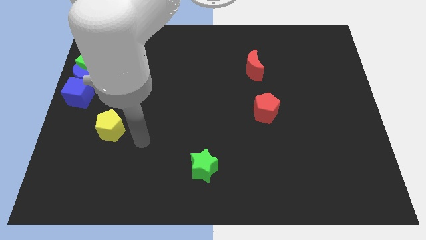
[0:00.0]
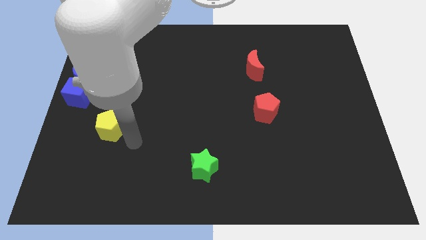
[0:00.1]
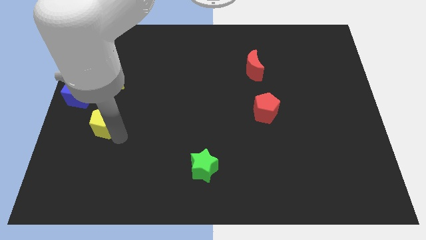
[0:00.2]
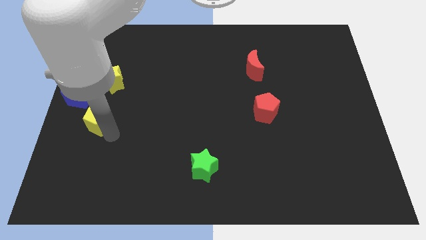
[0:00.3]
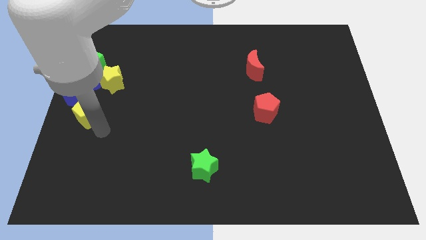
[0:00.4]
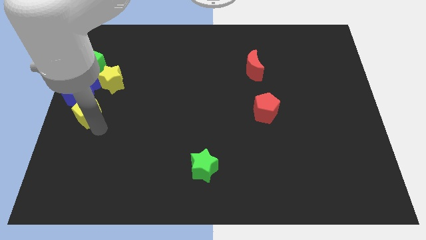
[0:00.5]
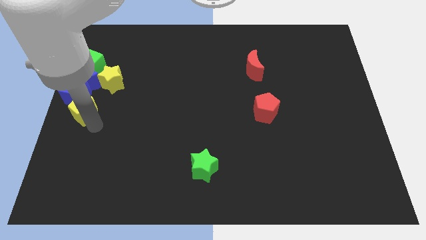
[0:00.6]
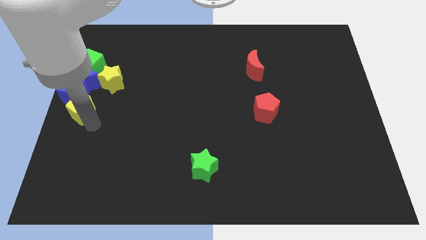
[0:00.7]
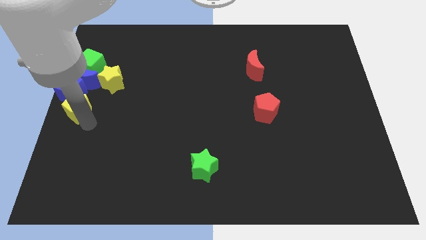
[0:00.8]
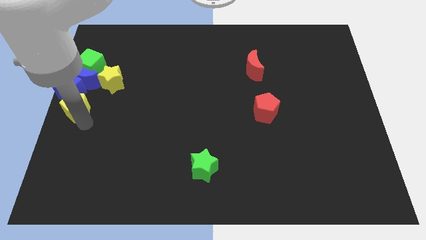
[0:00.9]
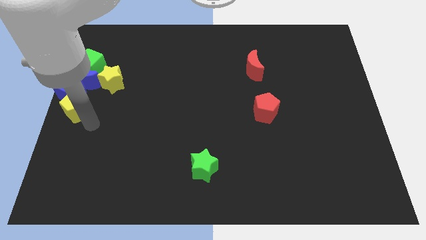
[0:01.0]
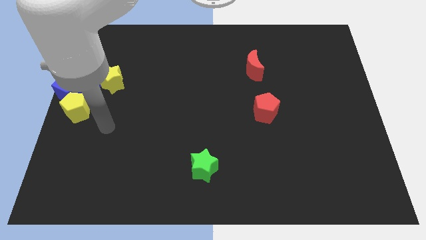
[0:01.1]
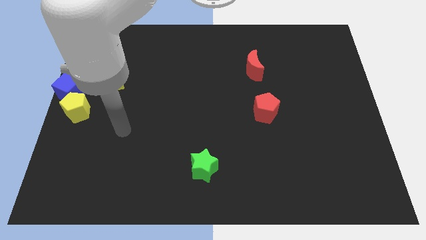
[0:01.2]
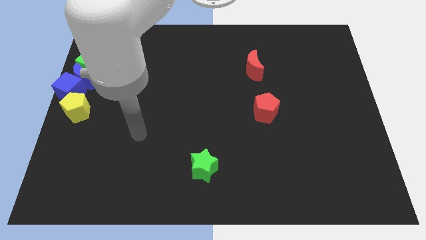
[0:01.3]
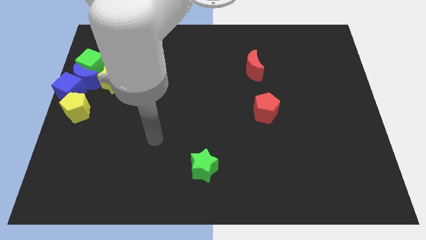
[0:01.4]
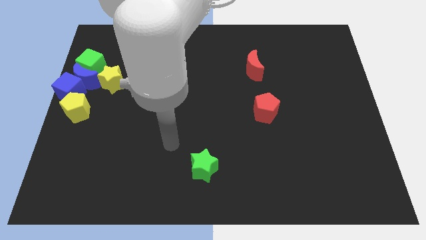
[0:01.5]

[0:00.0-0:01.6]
push the yellow pentagon into the blue cube

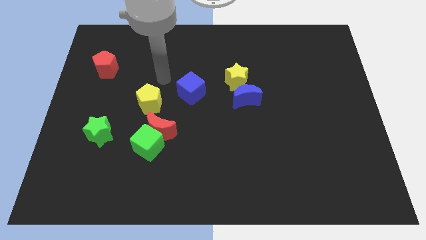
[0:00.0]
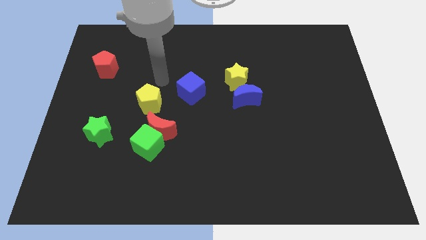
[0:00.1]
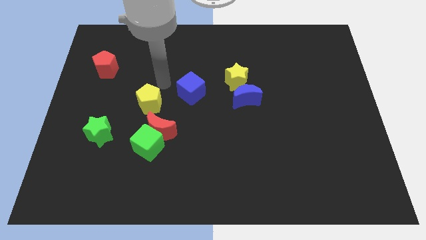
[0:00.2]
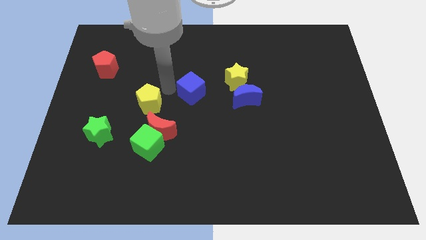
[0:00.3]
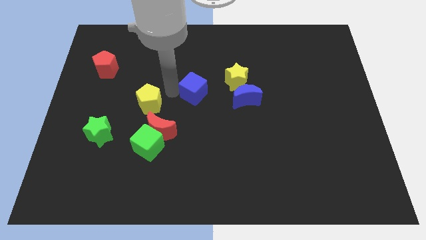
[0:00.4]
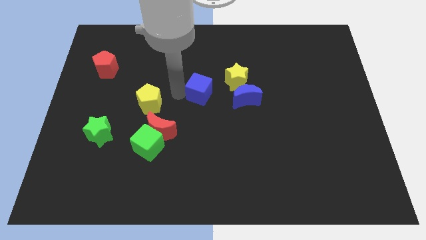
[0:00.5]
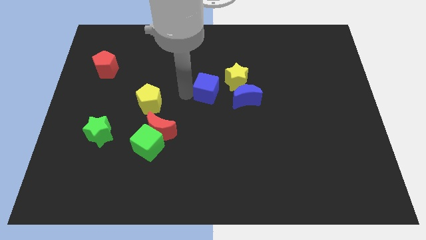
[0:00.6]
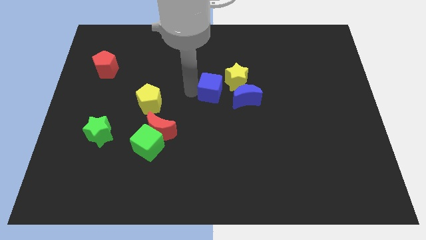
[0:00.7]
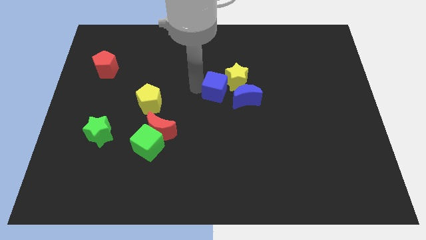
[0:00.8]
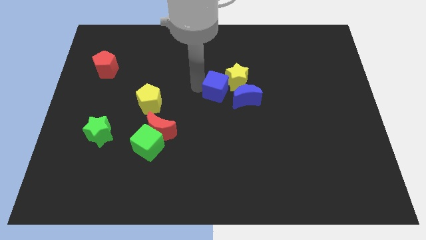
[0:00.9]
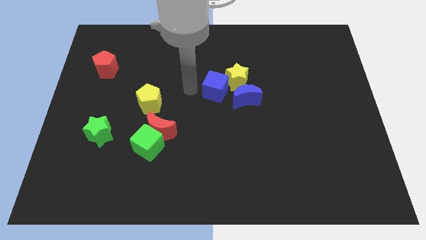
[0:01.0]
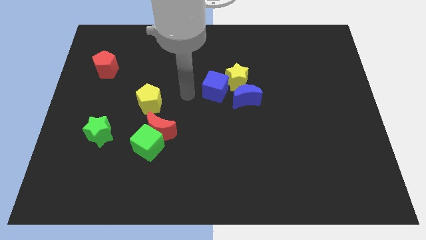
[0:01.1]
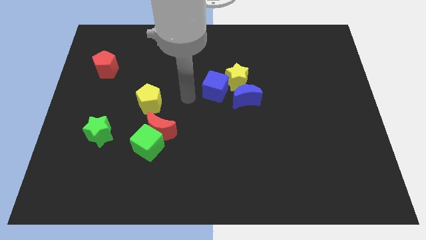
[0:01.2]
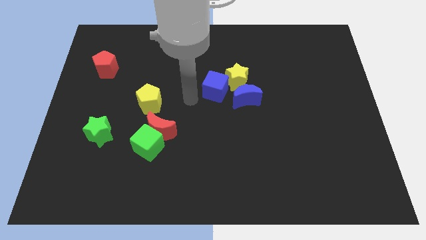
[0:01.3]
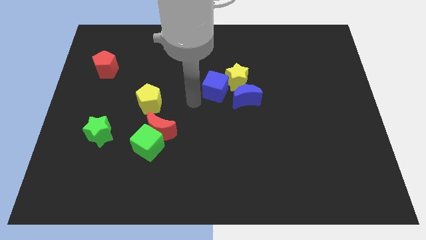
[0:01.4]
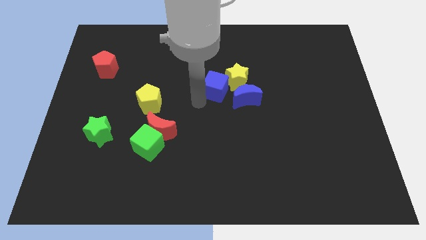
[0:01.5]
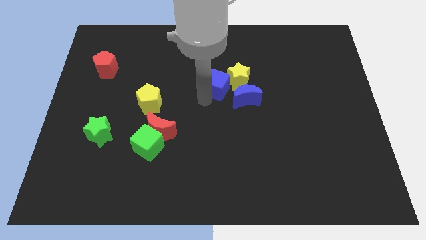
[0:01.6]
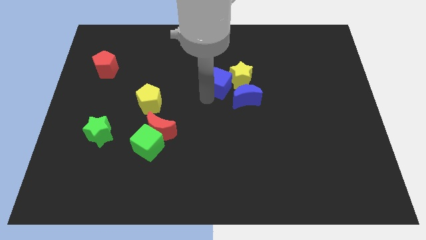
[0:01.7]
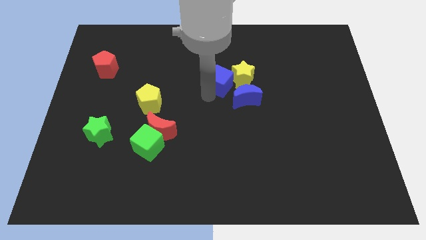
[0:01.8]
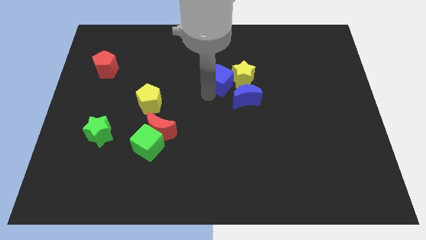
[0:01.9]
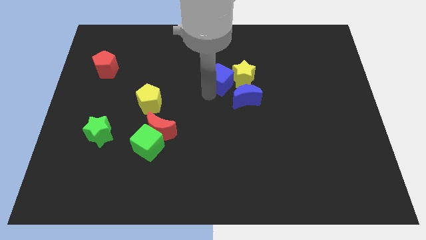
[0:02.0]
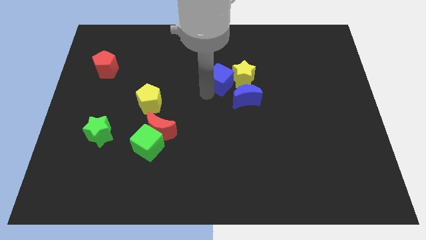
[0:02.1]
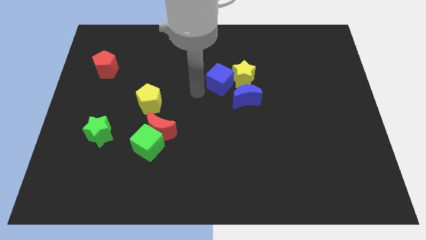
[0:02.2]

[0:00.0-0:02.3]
put the blue cube to the left side of yellow star

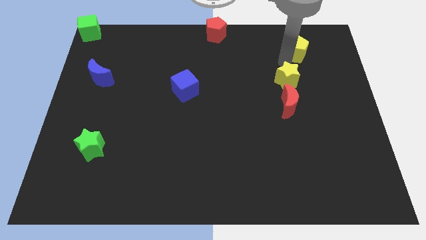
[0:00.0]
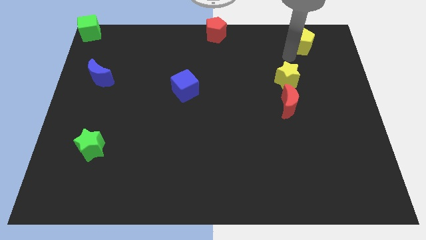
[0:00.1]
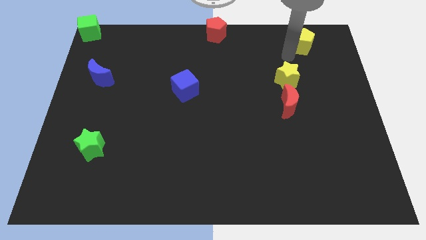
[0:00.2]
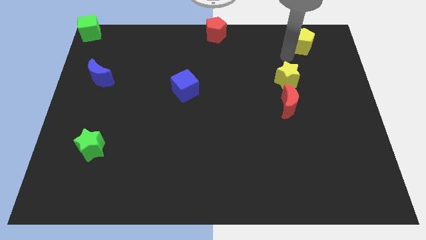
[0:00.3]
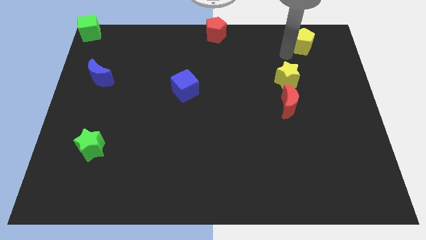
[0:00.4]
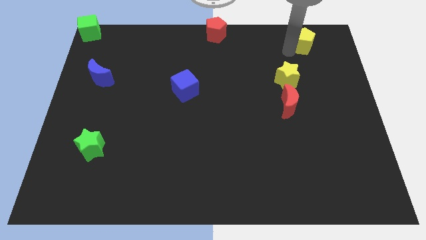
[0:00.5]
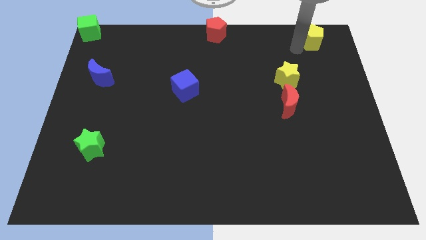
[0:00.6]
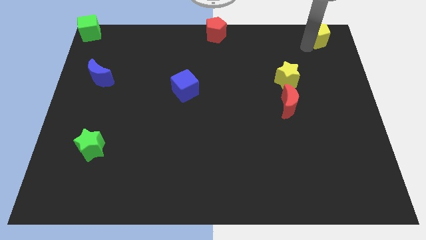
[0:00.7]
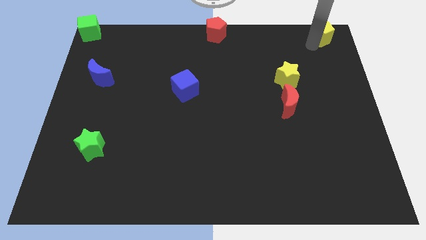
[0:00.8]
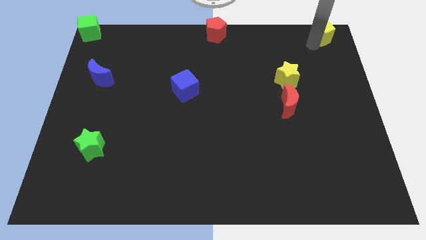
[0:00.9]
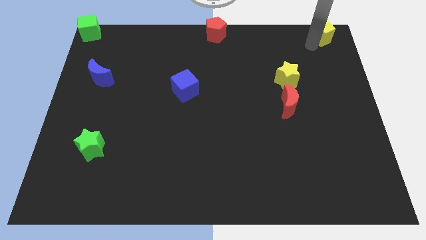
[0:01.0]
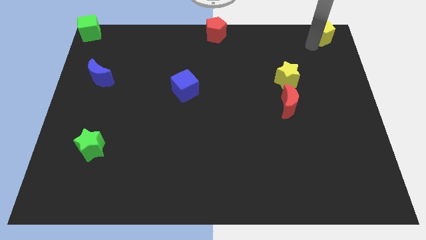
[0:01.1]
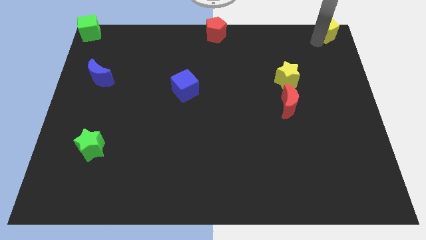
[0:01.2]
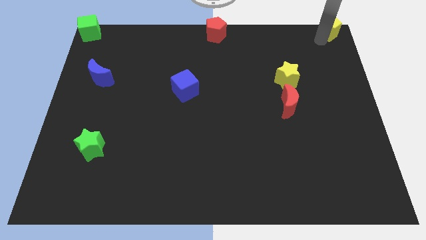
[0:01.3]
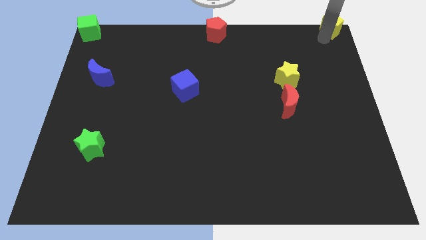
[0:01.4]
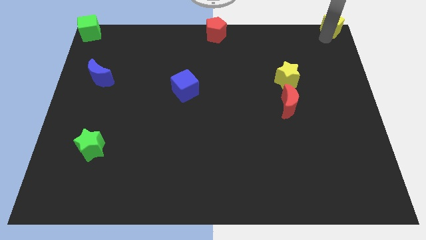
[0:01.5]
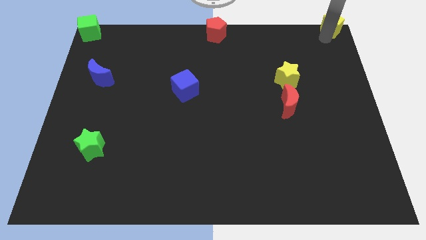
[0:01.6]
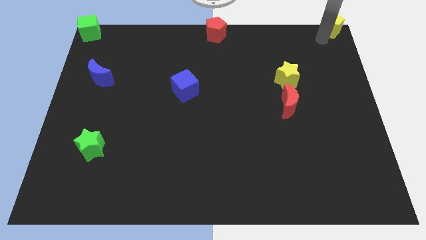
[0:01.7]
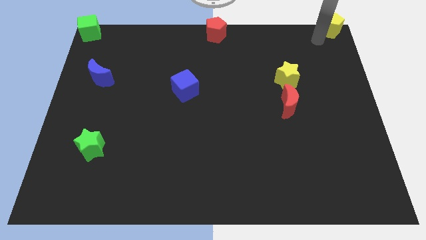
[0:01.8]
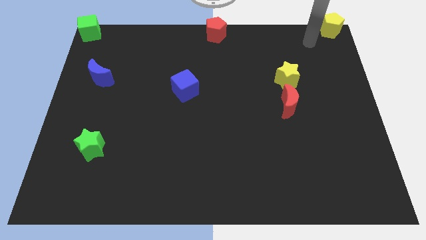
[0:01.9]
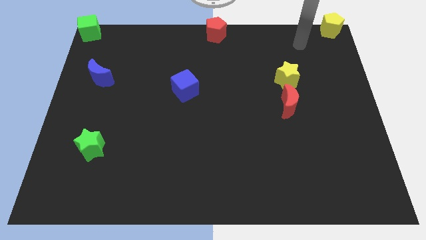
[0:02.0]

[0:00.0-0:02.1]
push the yellow pentagon towards the top right corner of the board

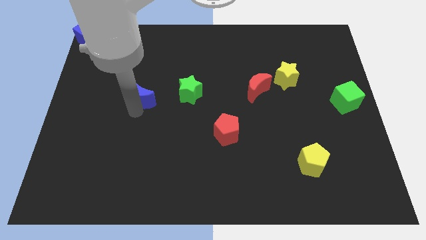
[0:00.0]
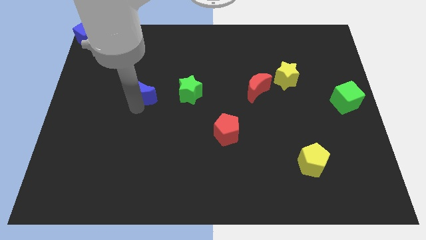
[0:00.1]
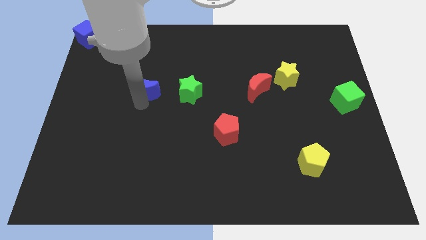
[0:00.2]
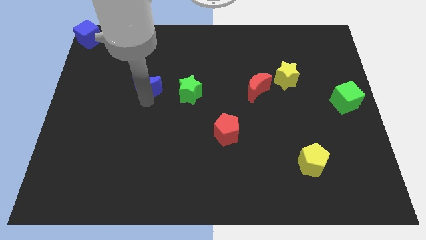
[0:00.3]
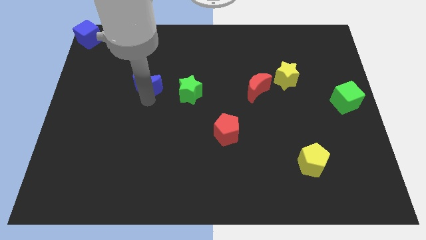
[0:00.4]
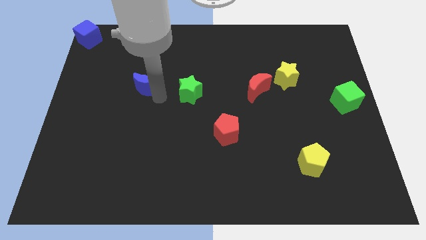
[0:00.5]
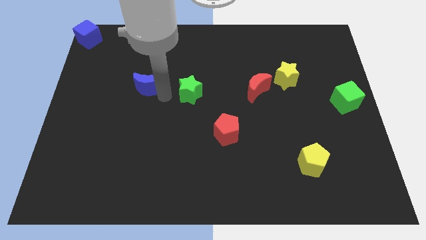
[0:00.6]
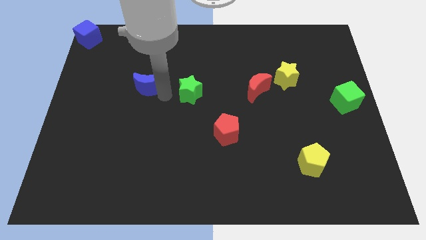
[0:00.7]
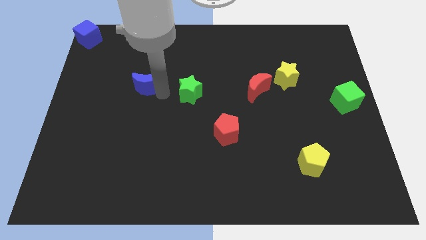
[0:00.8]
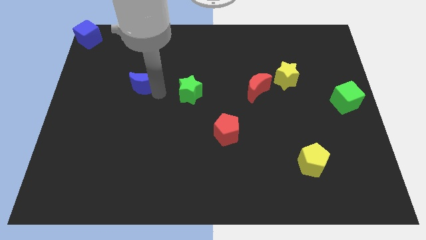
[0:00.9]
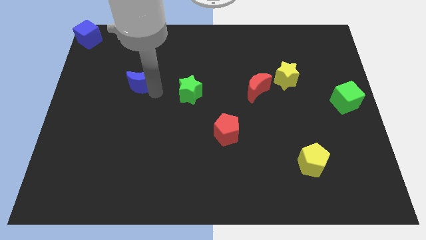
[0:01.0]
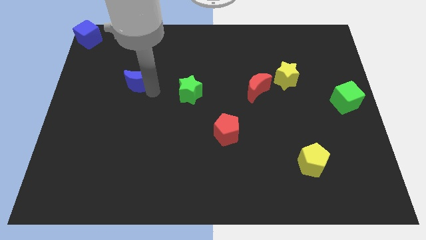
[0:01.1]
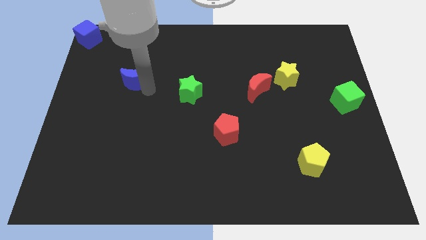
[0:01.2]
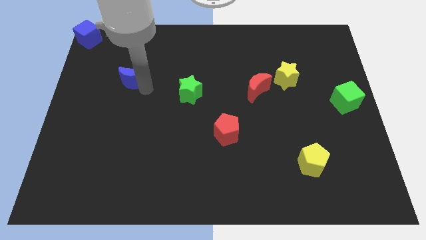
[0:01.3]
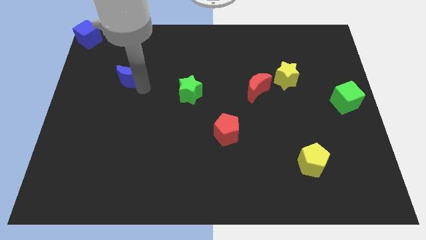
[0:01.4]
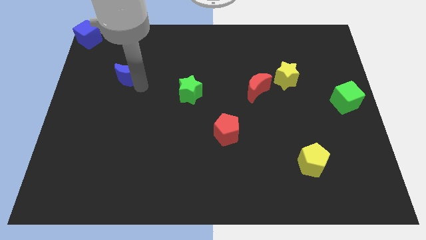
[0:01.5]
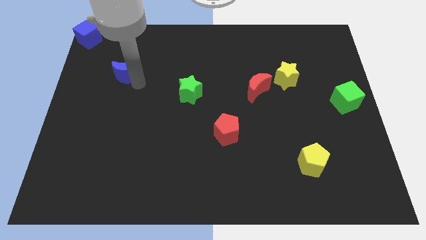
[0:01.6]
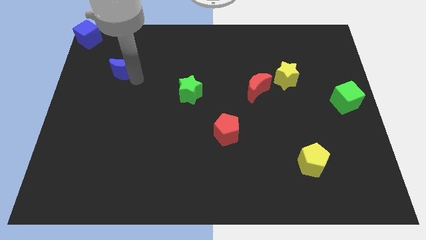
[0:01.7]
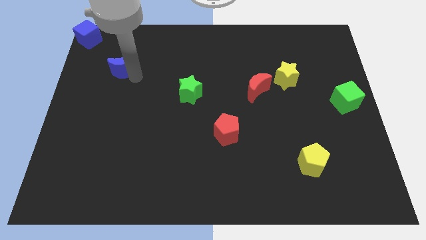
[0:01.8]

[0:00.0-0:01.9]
push the blue crescent to the top left

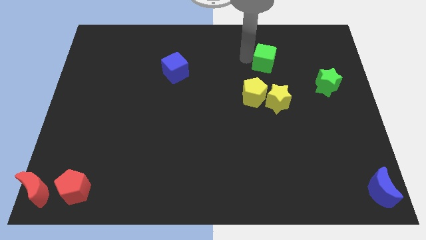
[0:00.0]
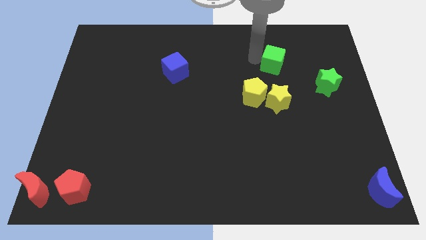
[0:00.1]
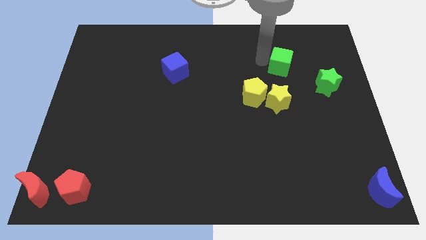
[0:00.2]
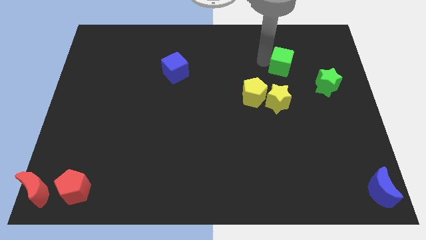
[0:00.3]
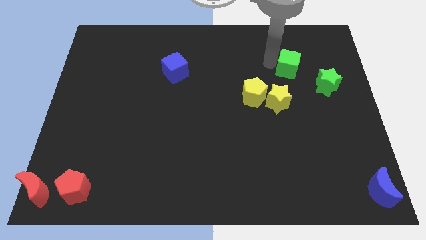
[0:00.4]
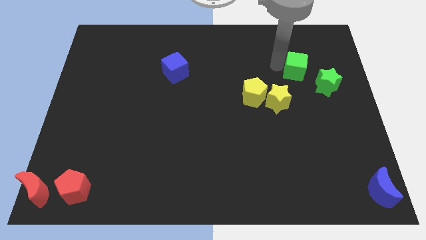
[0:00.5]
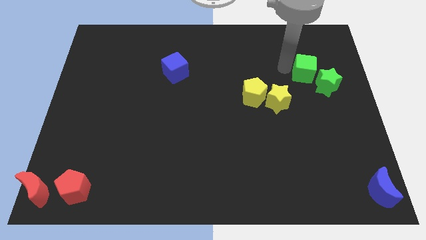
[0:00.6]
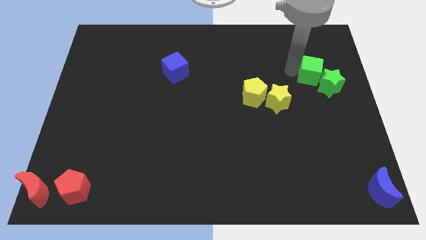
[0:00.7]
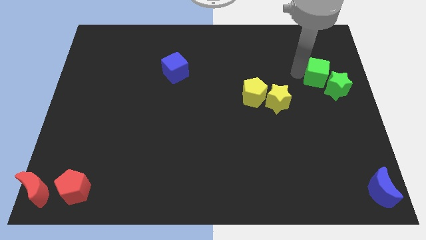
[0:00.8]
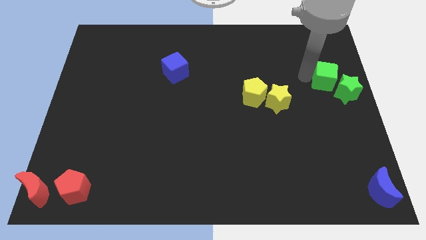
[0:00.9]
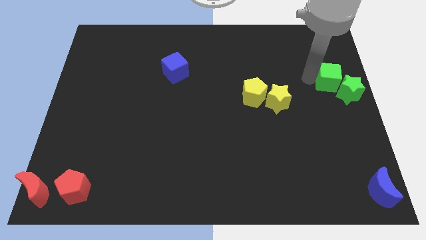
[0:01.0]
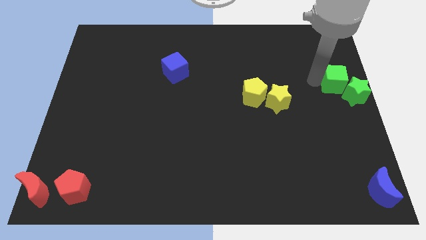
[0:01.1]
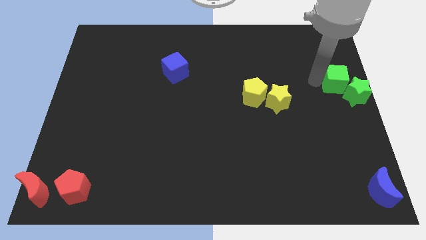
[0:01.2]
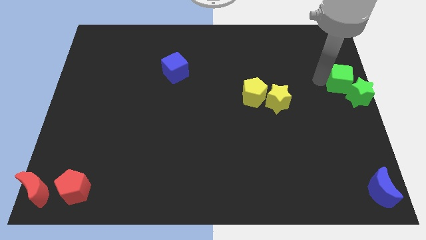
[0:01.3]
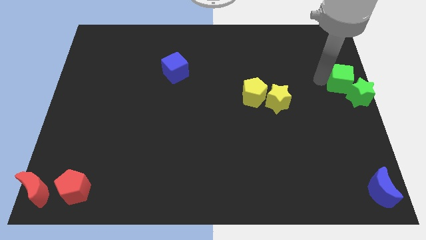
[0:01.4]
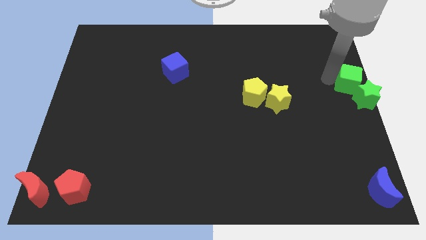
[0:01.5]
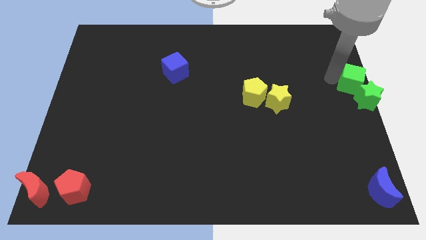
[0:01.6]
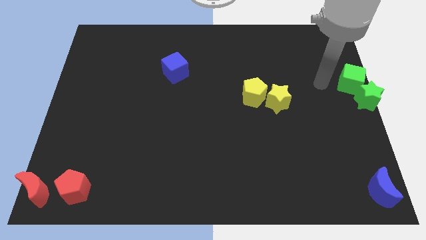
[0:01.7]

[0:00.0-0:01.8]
push the green star with the green cube towards the right center of the board
